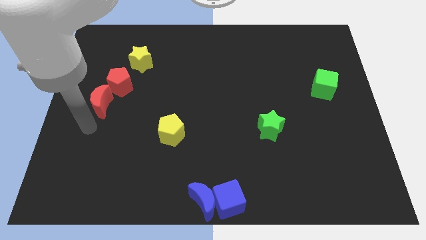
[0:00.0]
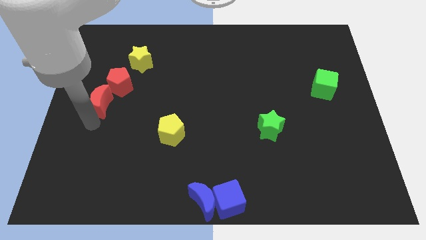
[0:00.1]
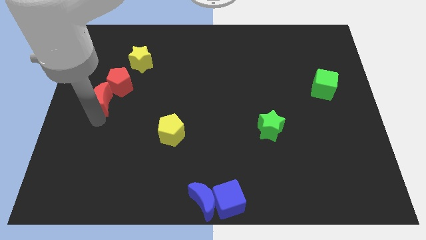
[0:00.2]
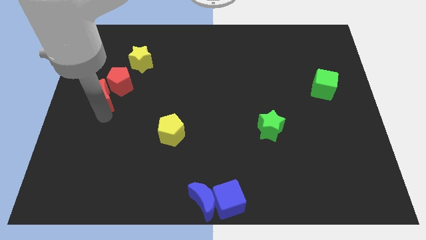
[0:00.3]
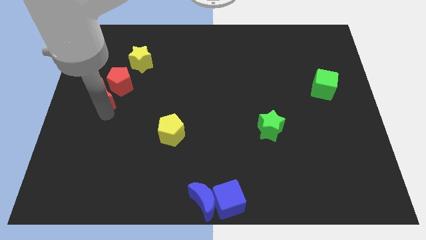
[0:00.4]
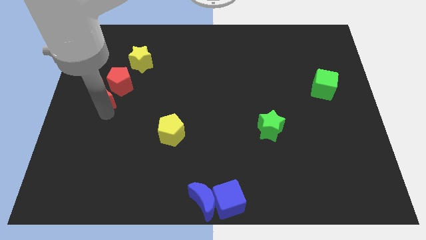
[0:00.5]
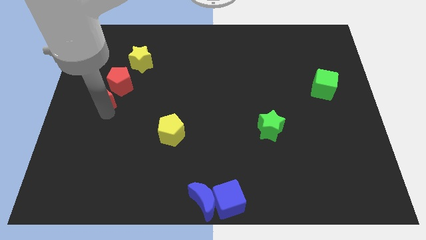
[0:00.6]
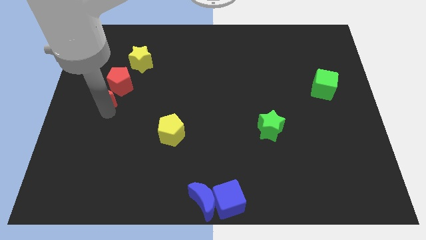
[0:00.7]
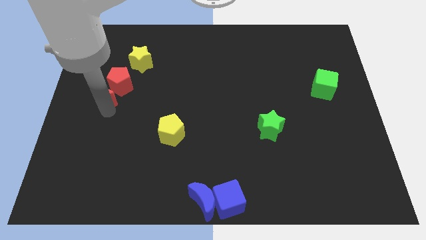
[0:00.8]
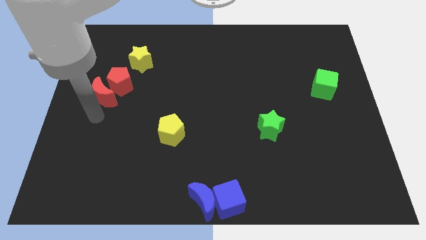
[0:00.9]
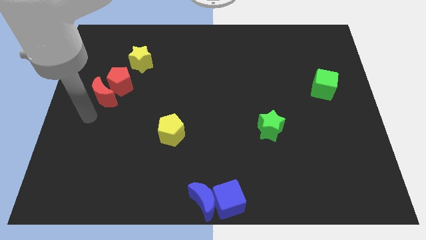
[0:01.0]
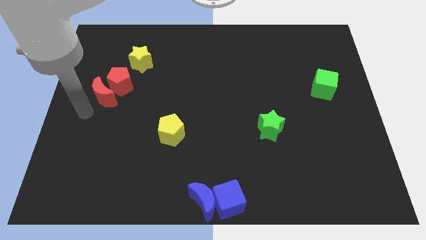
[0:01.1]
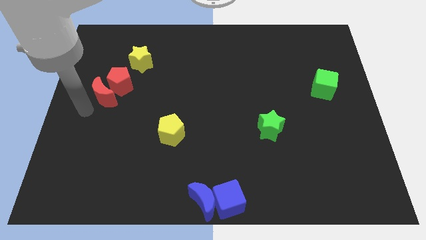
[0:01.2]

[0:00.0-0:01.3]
push the red moon into the red pentagon

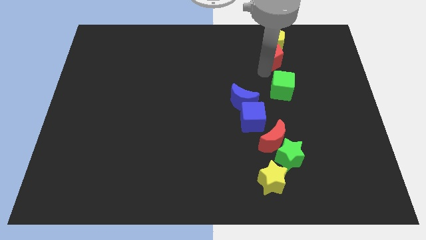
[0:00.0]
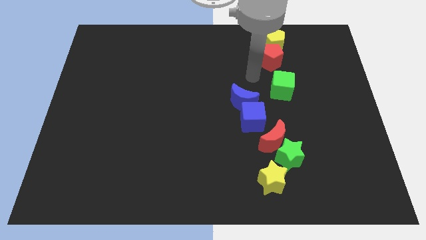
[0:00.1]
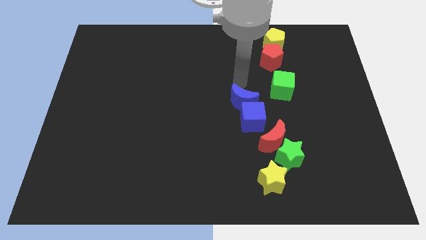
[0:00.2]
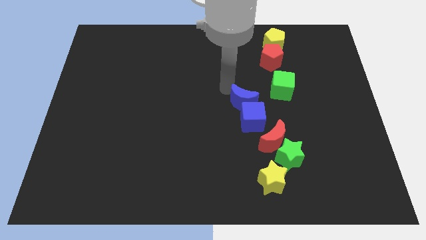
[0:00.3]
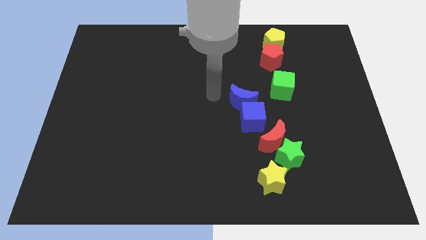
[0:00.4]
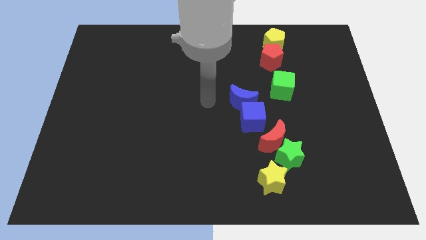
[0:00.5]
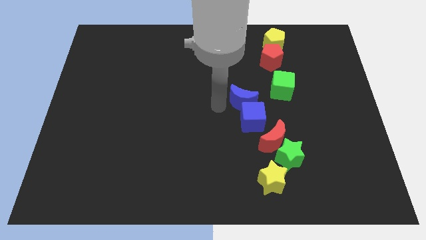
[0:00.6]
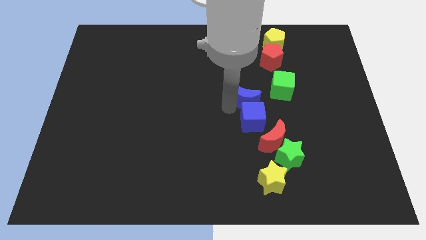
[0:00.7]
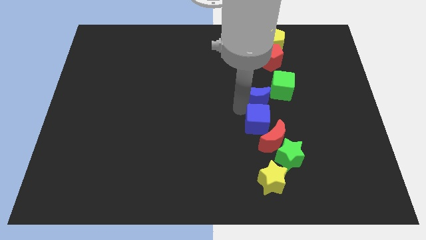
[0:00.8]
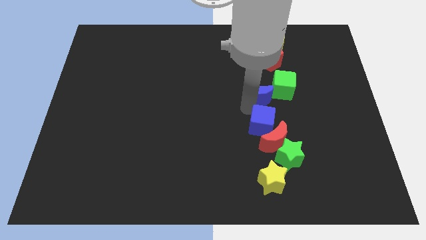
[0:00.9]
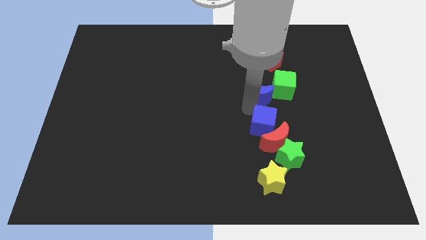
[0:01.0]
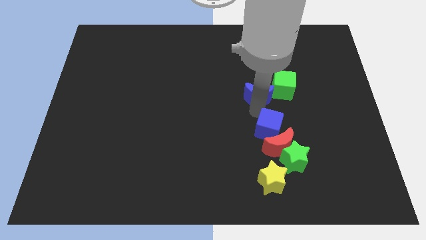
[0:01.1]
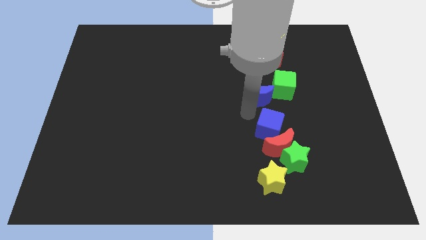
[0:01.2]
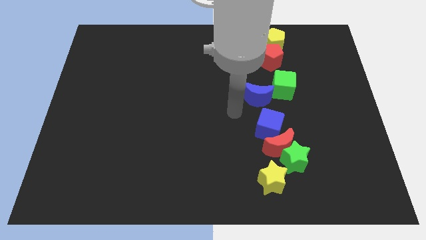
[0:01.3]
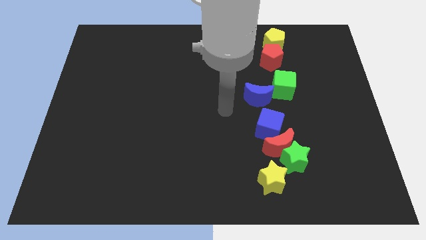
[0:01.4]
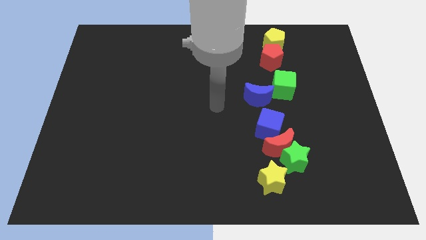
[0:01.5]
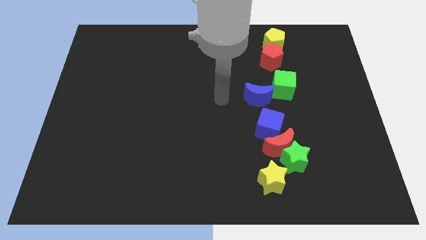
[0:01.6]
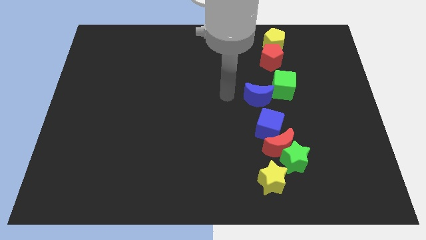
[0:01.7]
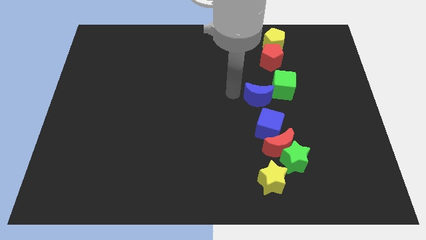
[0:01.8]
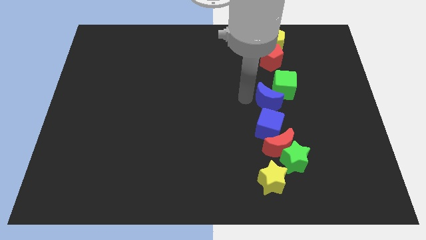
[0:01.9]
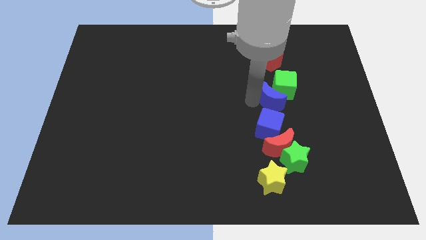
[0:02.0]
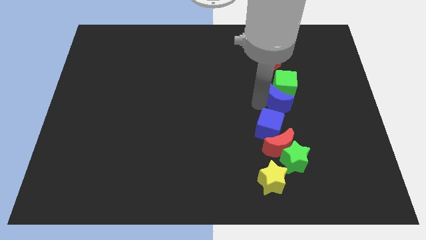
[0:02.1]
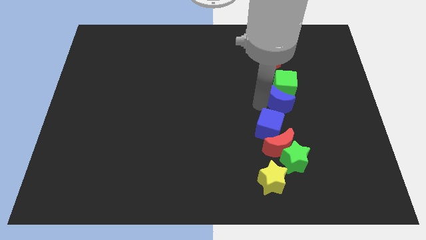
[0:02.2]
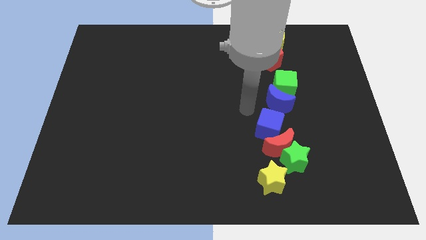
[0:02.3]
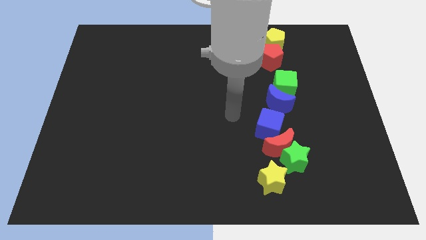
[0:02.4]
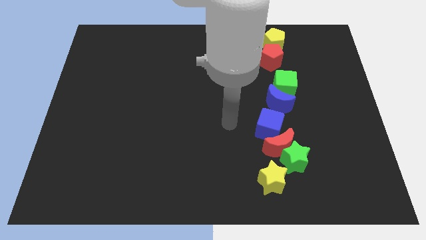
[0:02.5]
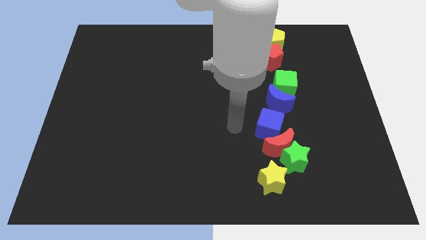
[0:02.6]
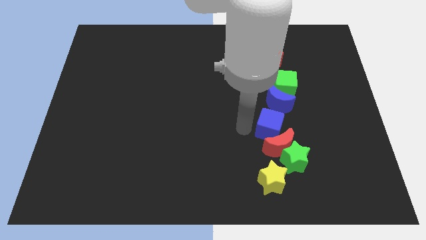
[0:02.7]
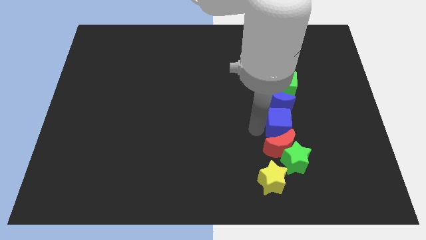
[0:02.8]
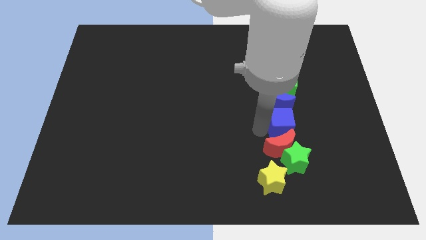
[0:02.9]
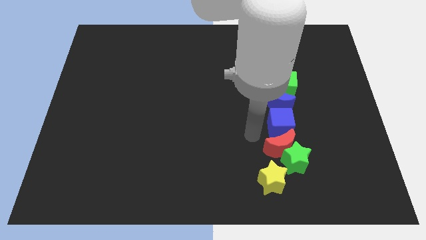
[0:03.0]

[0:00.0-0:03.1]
push the blue blocks to the bottom of the green cube

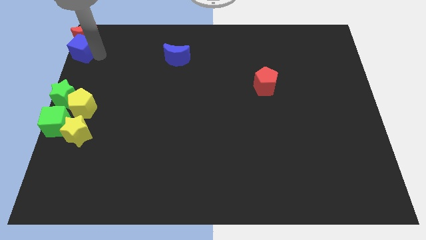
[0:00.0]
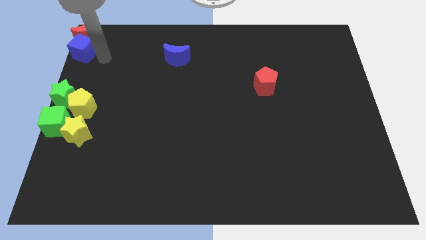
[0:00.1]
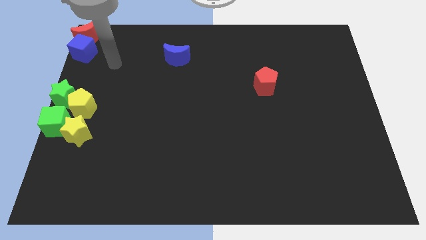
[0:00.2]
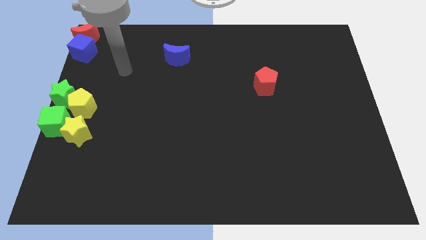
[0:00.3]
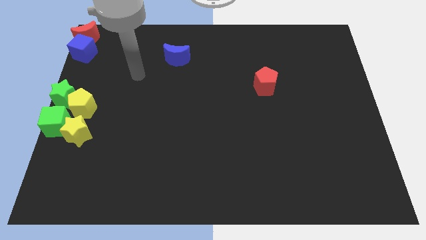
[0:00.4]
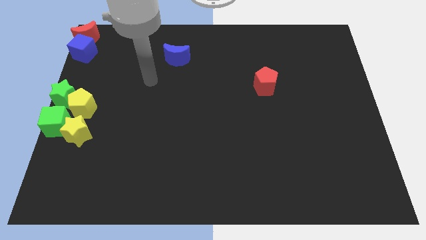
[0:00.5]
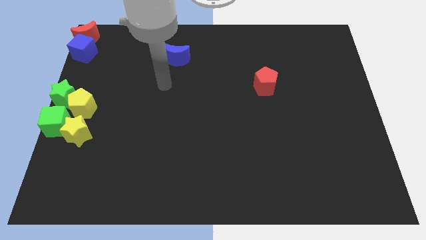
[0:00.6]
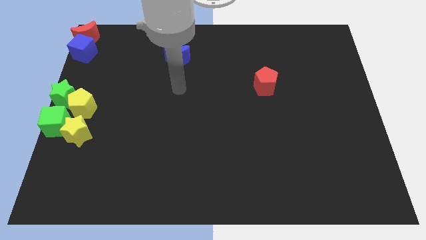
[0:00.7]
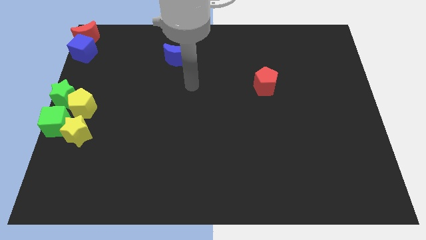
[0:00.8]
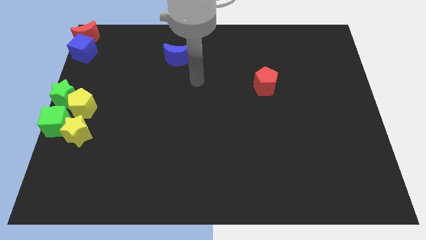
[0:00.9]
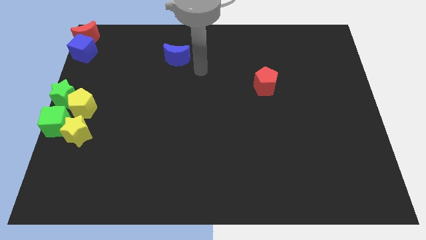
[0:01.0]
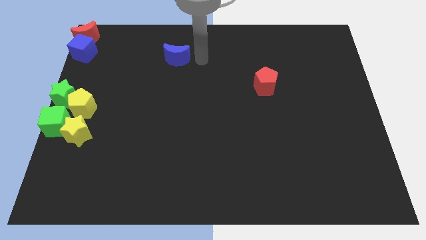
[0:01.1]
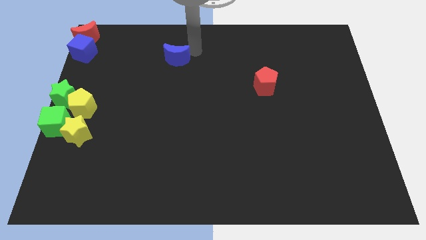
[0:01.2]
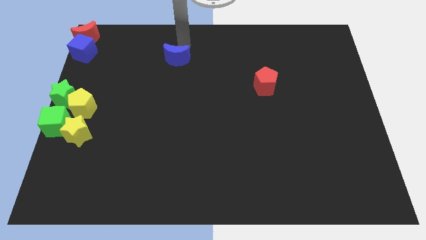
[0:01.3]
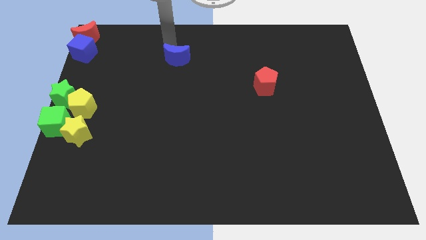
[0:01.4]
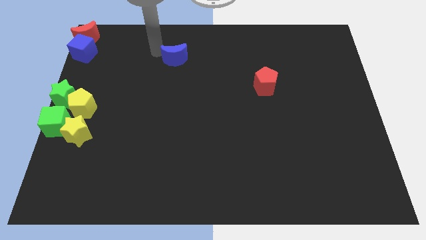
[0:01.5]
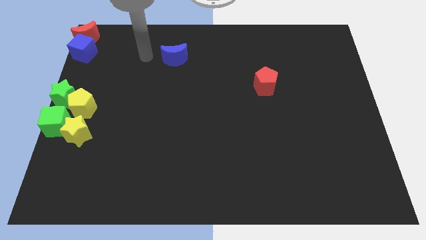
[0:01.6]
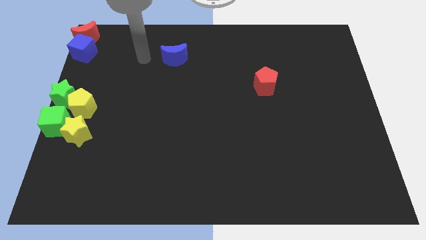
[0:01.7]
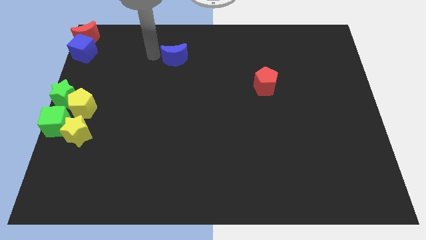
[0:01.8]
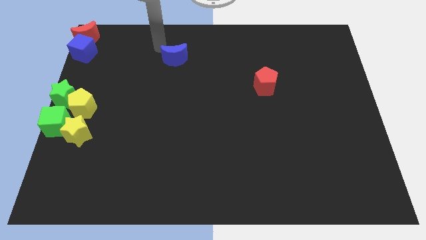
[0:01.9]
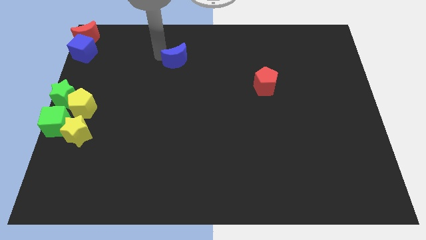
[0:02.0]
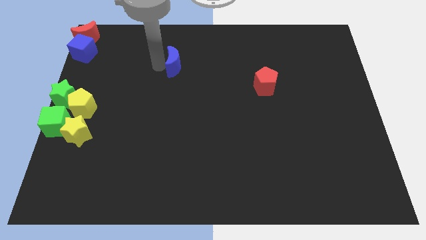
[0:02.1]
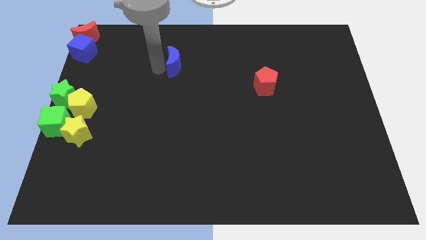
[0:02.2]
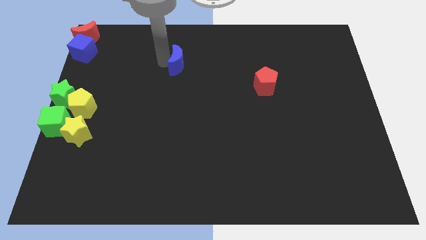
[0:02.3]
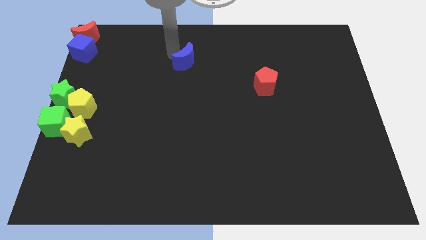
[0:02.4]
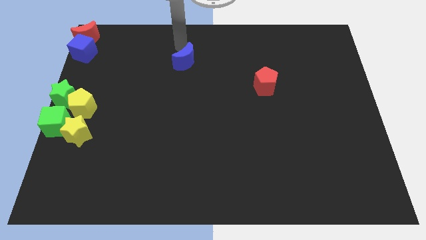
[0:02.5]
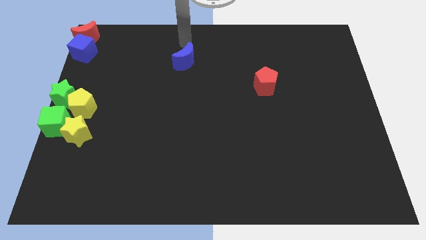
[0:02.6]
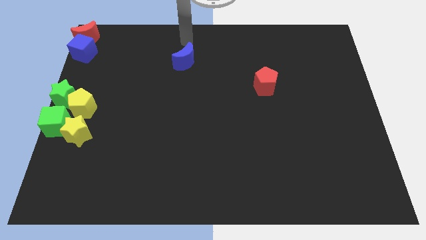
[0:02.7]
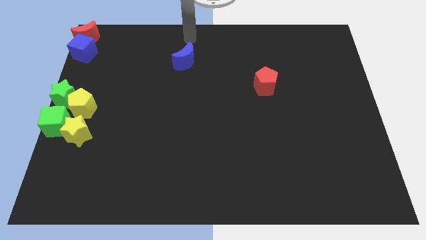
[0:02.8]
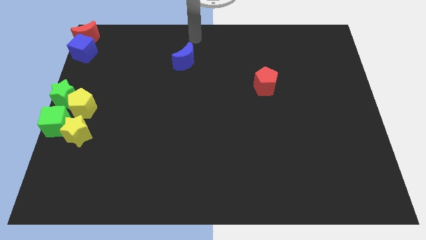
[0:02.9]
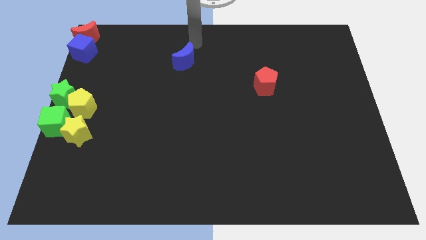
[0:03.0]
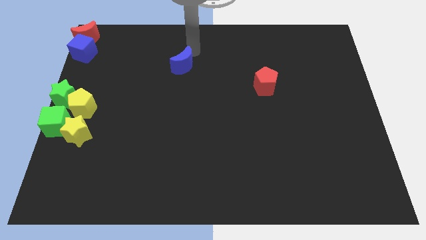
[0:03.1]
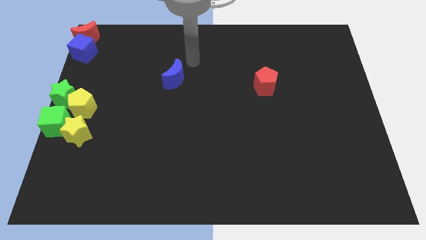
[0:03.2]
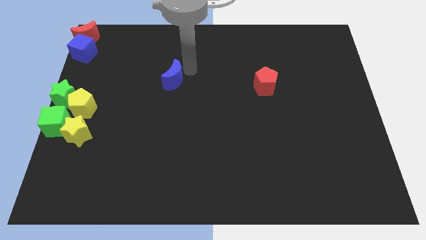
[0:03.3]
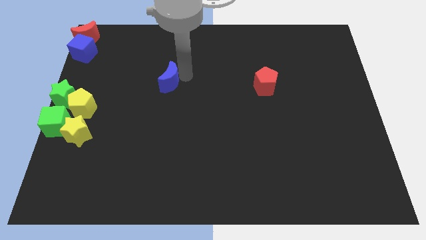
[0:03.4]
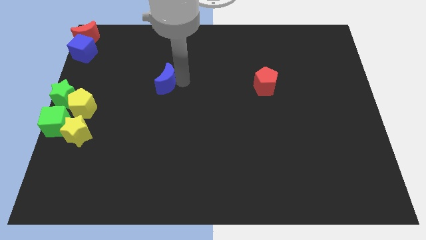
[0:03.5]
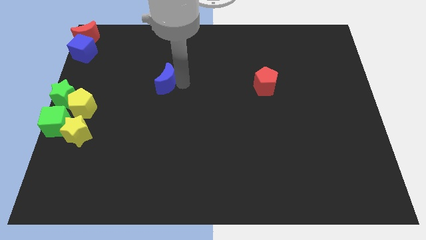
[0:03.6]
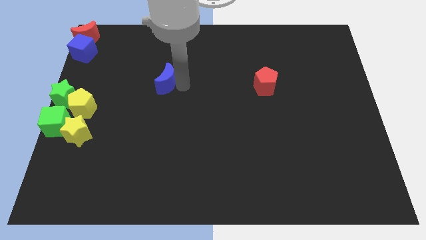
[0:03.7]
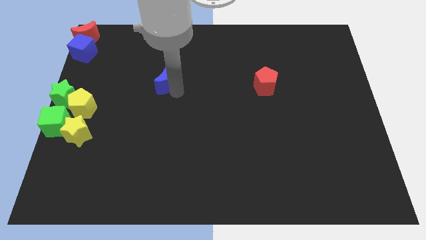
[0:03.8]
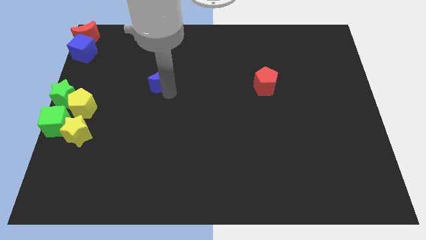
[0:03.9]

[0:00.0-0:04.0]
move the blue crescent to the left of the red pentagon

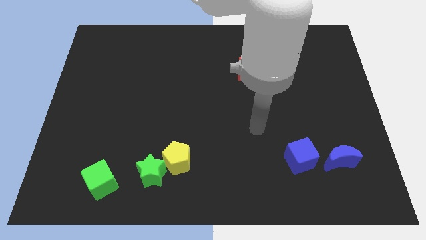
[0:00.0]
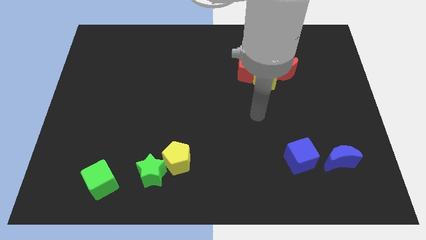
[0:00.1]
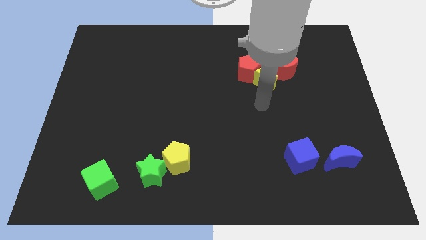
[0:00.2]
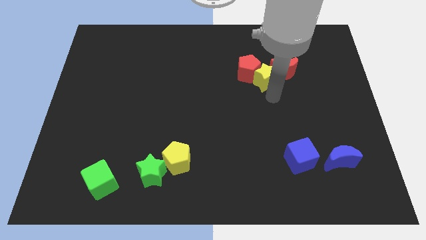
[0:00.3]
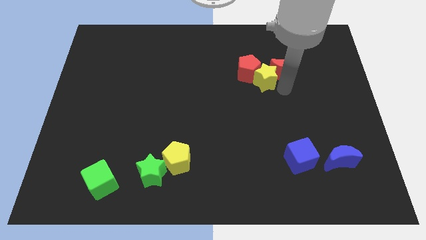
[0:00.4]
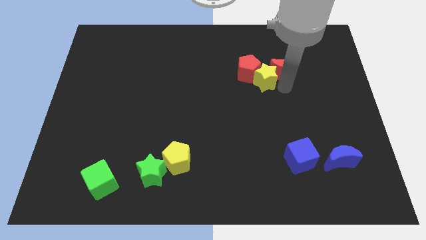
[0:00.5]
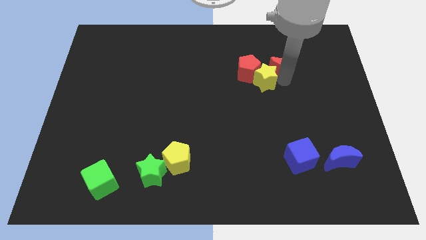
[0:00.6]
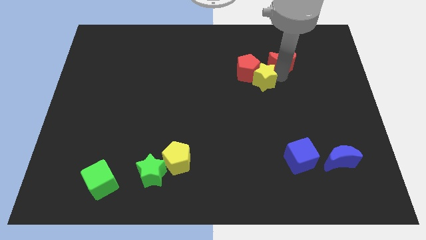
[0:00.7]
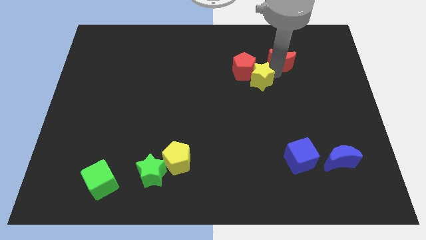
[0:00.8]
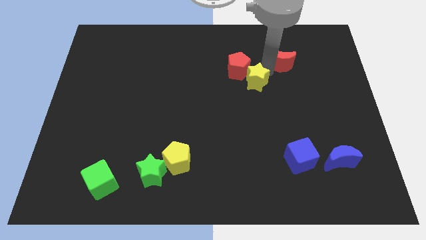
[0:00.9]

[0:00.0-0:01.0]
push the red crescent slightly to the top
